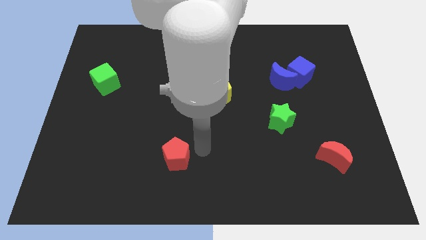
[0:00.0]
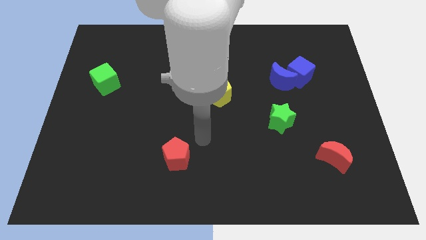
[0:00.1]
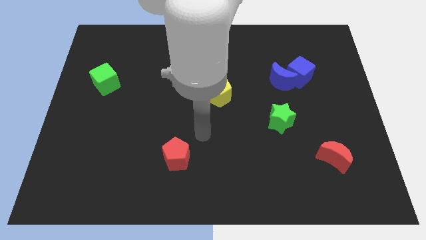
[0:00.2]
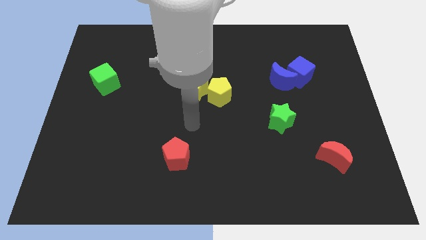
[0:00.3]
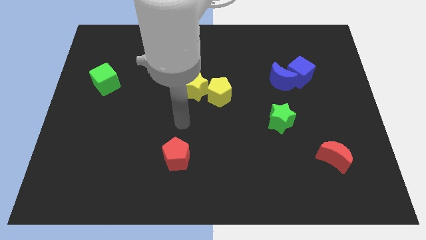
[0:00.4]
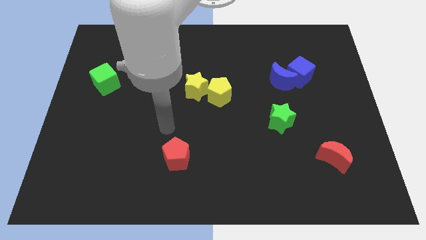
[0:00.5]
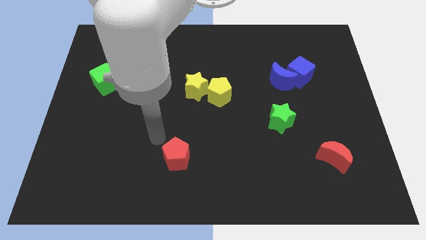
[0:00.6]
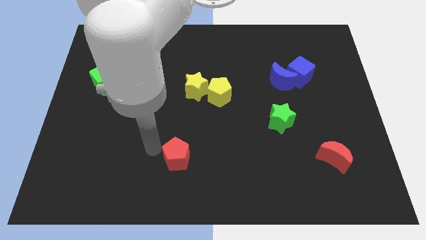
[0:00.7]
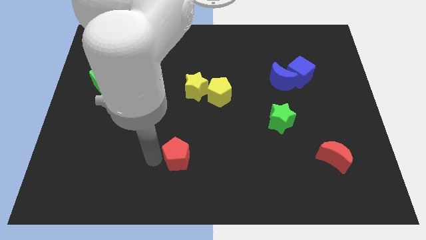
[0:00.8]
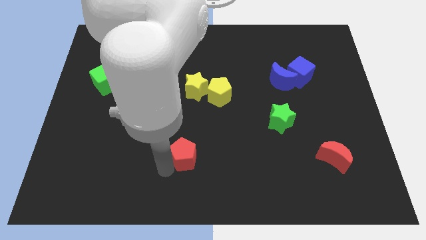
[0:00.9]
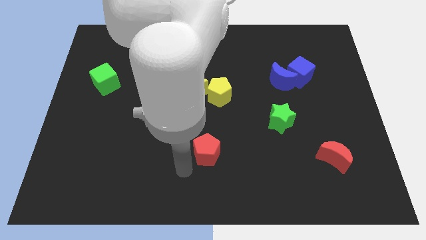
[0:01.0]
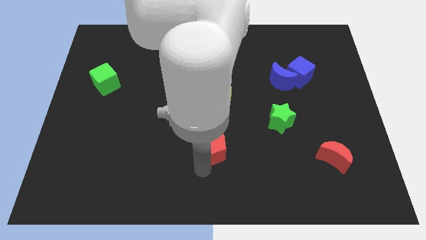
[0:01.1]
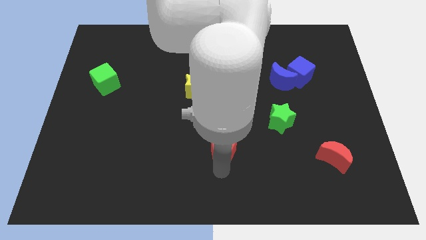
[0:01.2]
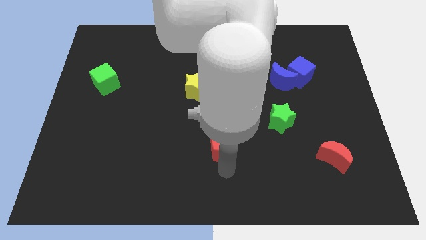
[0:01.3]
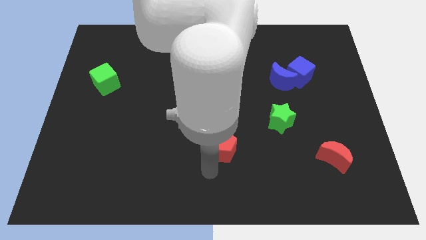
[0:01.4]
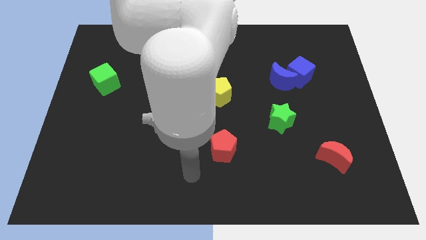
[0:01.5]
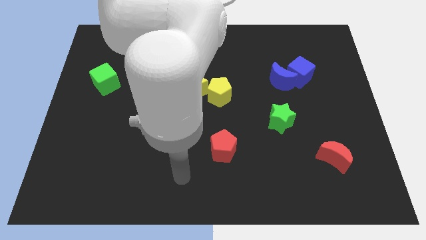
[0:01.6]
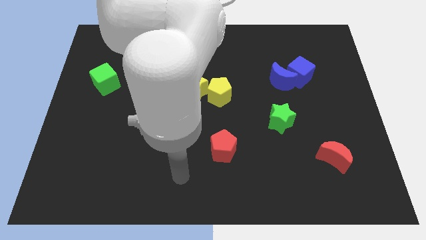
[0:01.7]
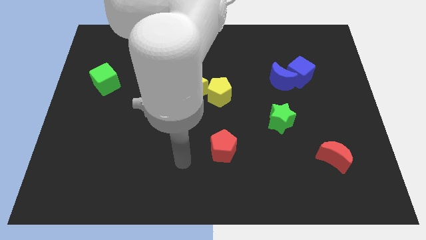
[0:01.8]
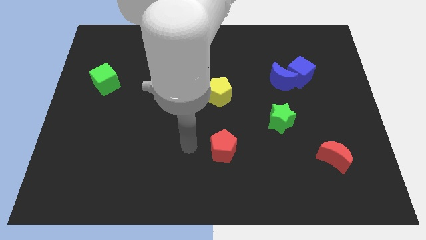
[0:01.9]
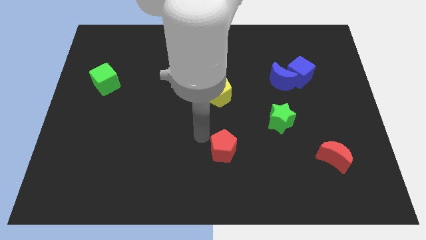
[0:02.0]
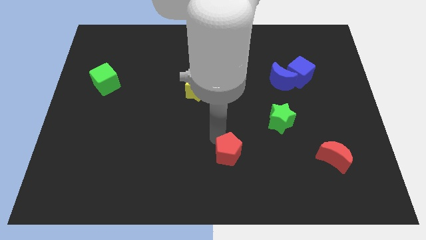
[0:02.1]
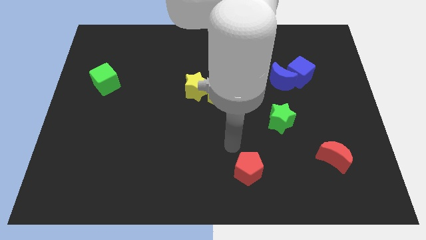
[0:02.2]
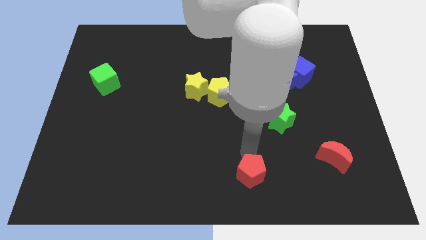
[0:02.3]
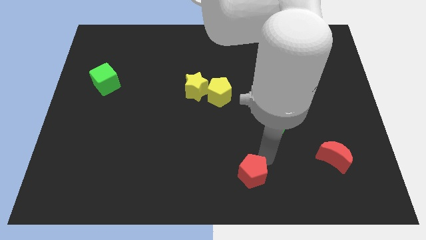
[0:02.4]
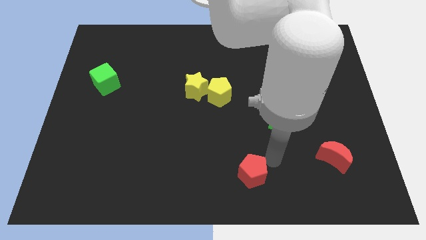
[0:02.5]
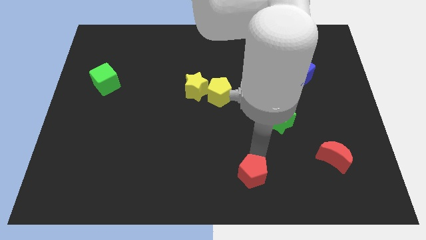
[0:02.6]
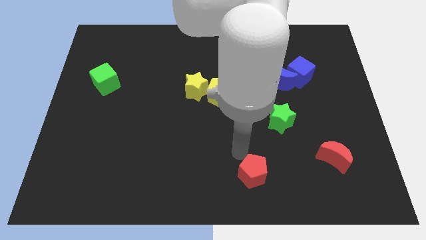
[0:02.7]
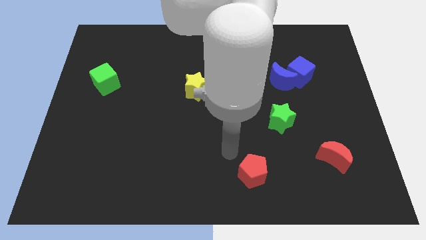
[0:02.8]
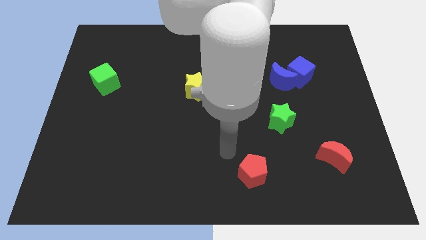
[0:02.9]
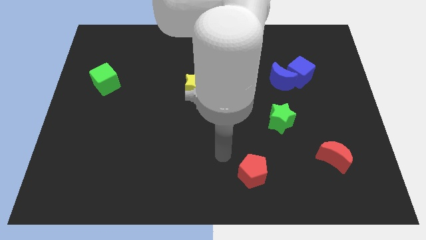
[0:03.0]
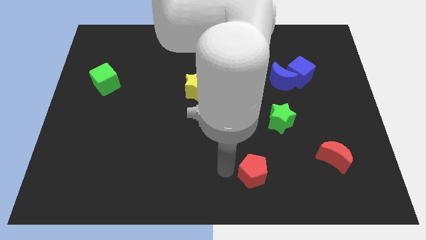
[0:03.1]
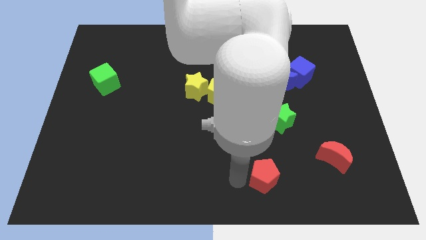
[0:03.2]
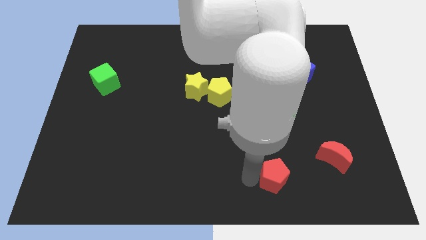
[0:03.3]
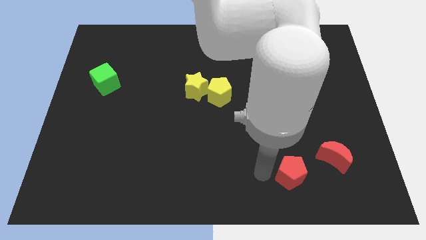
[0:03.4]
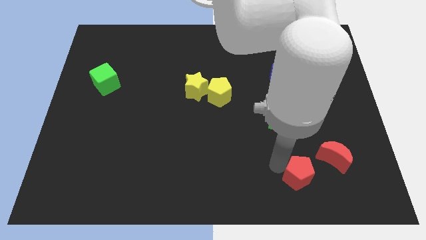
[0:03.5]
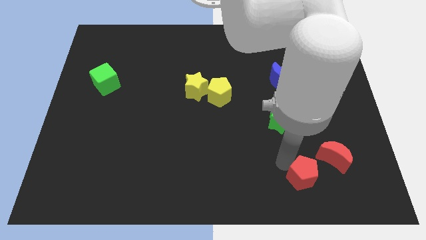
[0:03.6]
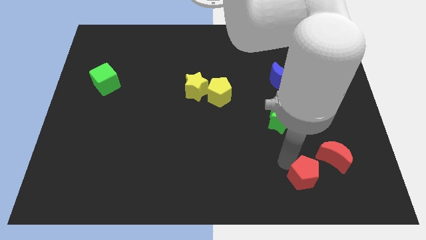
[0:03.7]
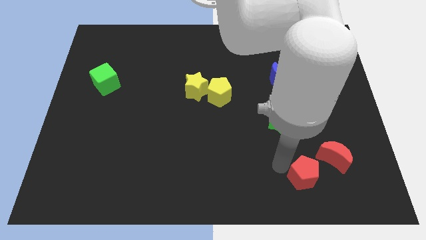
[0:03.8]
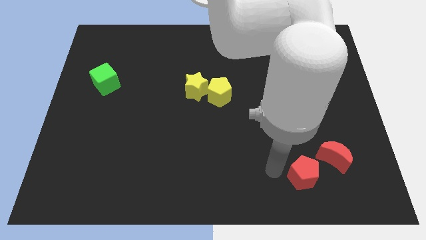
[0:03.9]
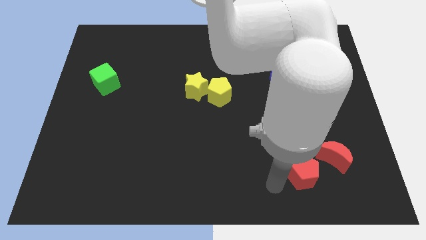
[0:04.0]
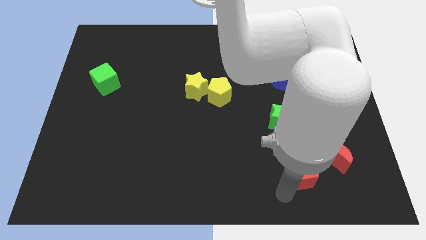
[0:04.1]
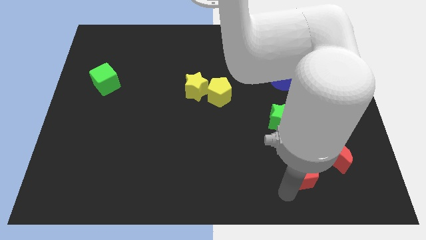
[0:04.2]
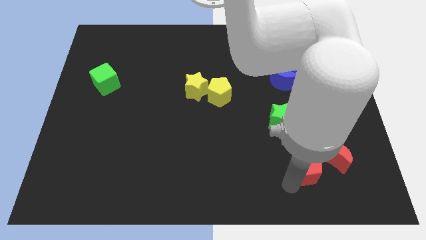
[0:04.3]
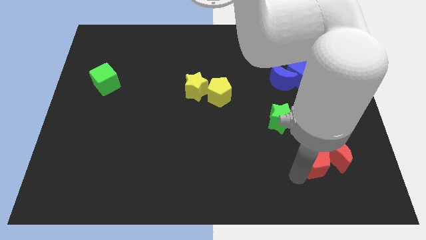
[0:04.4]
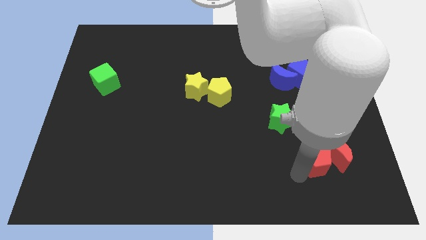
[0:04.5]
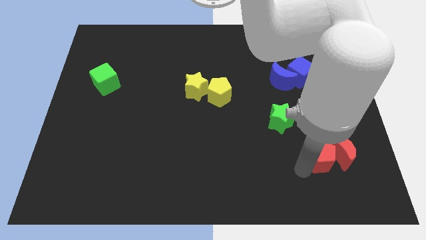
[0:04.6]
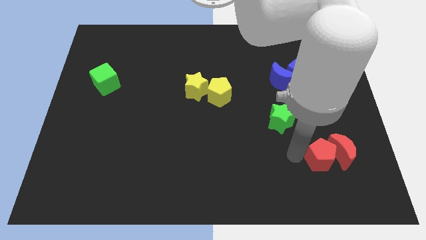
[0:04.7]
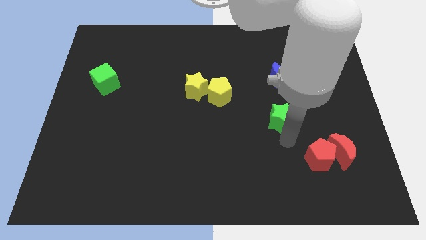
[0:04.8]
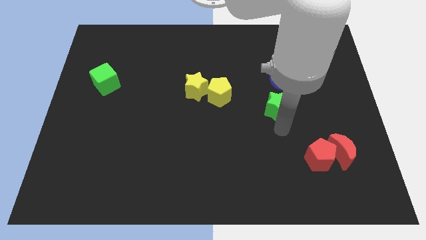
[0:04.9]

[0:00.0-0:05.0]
move the red pentagon into the red crescent

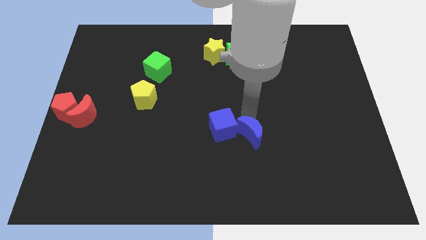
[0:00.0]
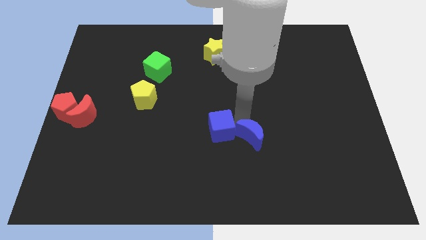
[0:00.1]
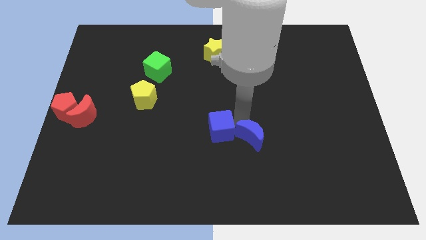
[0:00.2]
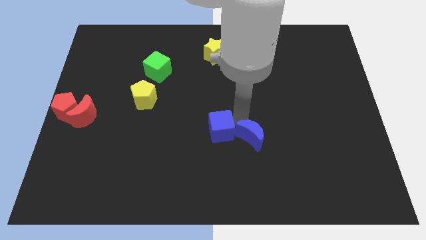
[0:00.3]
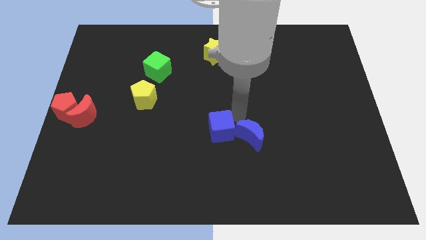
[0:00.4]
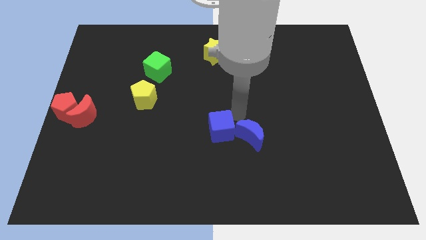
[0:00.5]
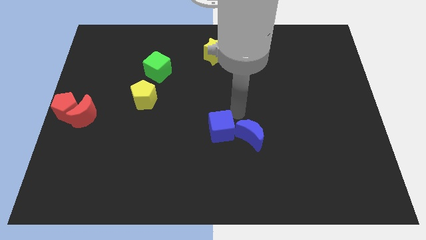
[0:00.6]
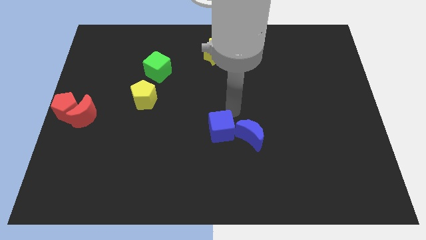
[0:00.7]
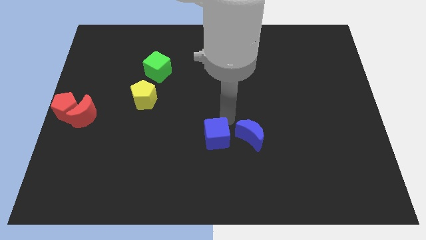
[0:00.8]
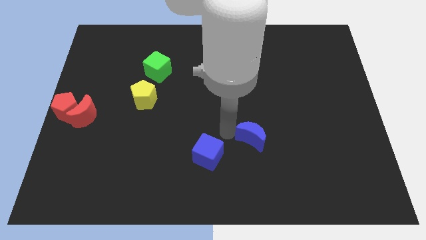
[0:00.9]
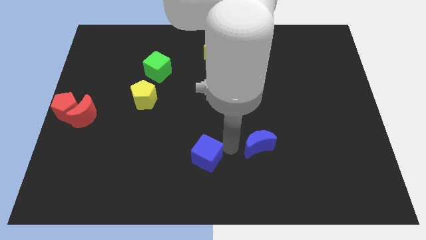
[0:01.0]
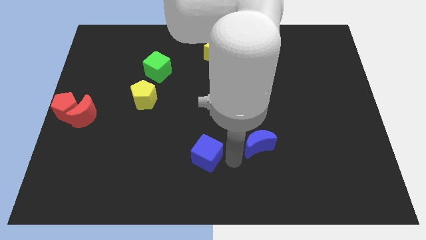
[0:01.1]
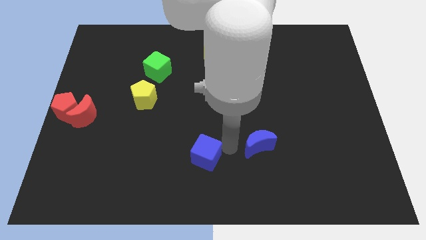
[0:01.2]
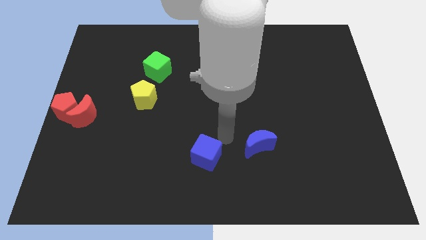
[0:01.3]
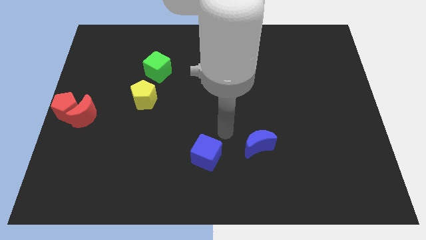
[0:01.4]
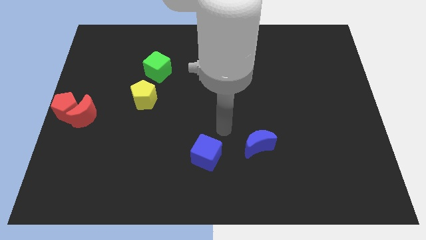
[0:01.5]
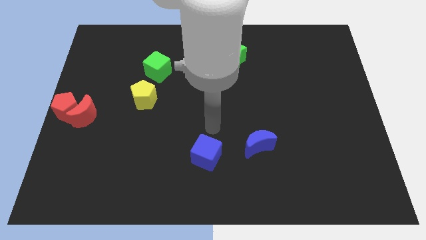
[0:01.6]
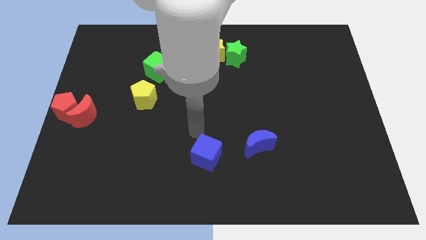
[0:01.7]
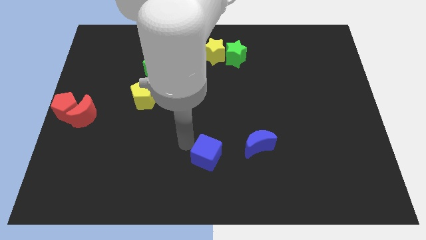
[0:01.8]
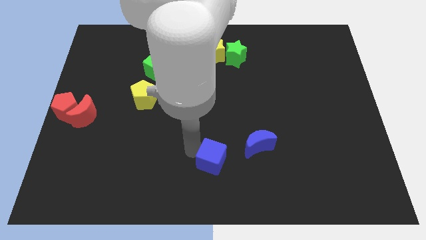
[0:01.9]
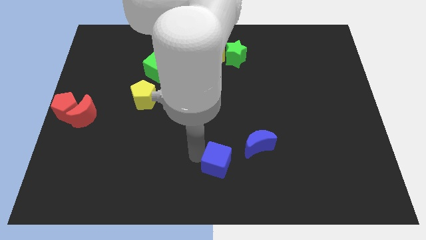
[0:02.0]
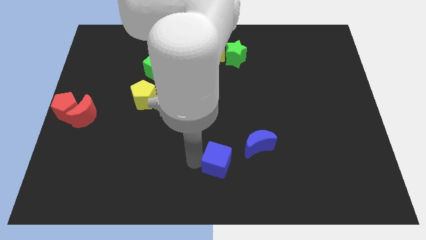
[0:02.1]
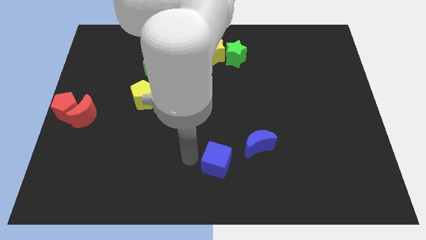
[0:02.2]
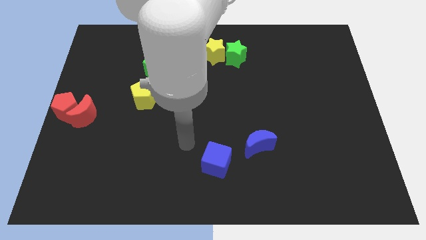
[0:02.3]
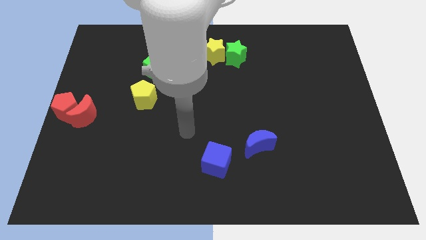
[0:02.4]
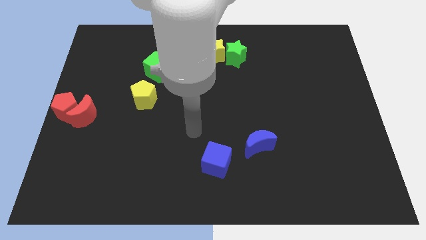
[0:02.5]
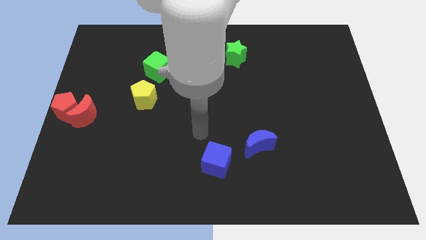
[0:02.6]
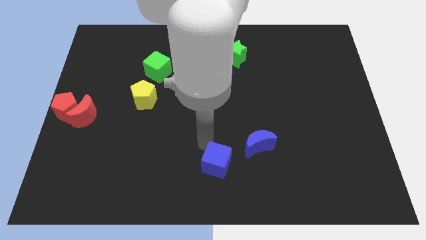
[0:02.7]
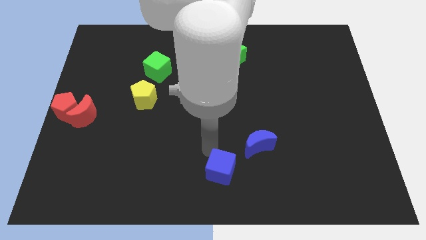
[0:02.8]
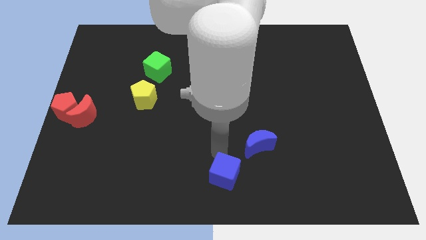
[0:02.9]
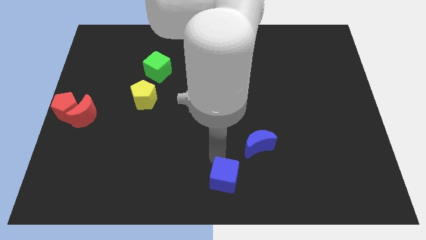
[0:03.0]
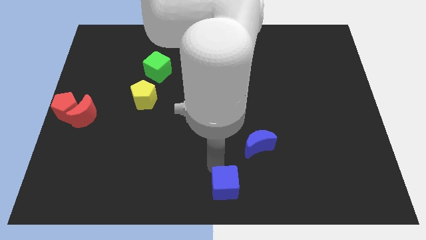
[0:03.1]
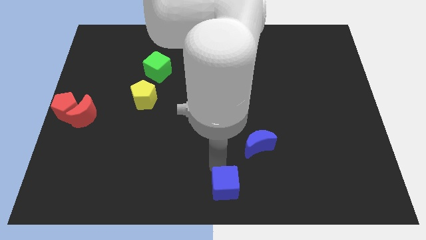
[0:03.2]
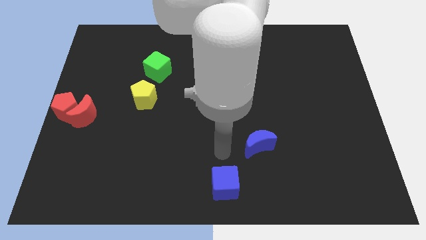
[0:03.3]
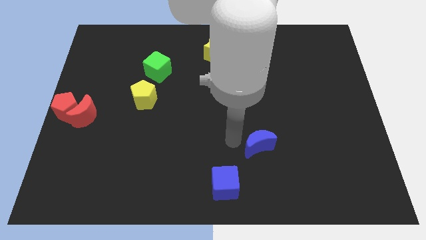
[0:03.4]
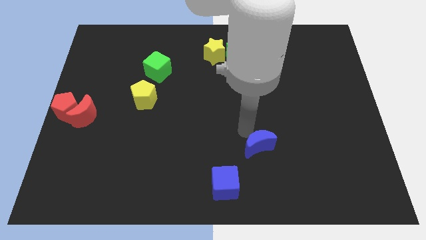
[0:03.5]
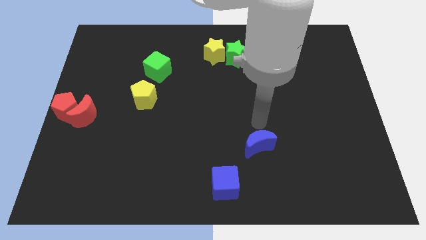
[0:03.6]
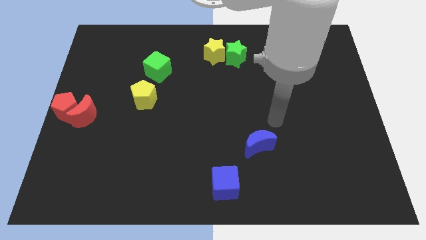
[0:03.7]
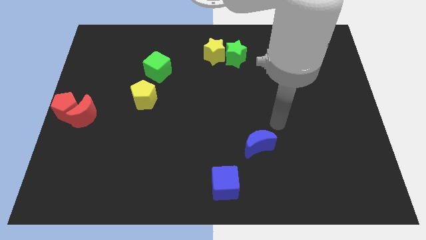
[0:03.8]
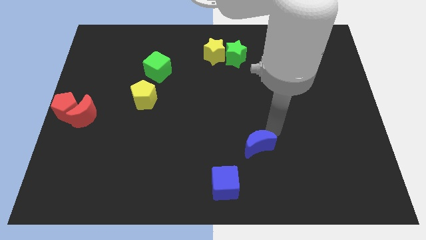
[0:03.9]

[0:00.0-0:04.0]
place blue cube to the bottom center of the board

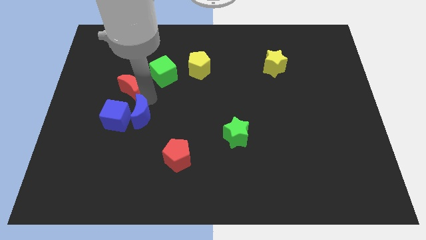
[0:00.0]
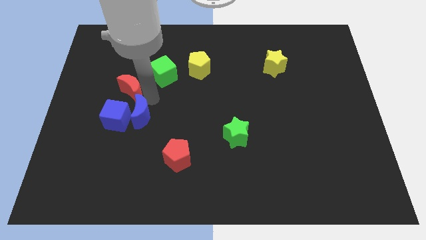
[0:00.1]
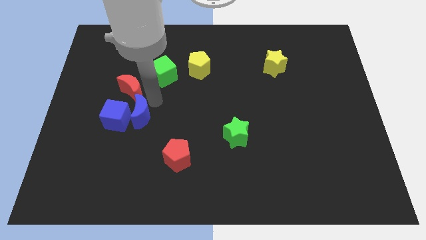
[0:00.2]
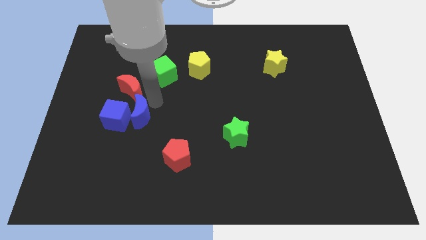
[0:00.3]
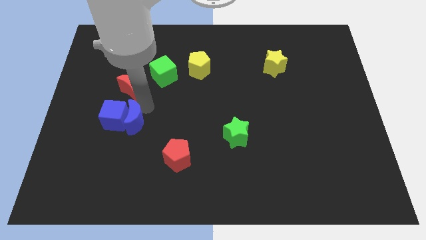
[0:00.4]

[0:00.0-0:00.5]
slightly push the red crescent
